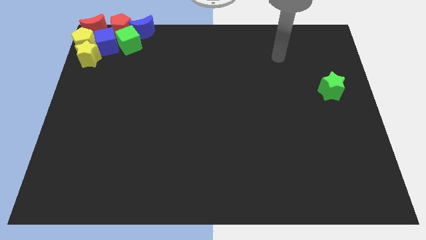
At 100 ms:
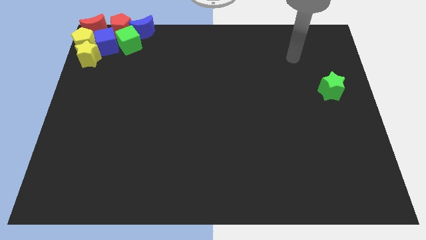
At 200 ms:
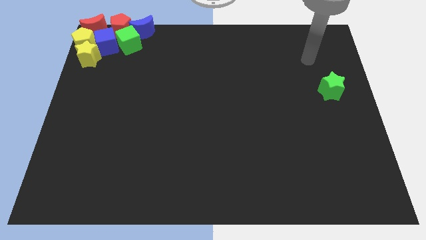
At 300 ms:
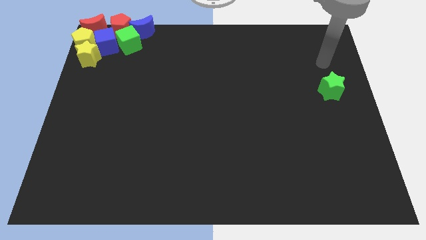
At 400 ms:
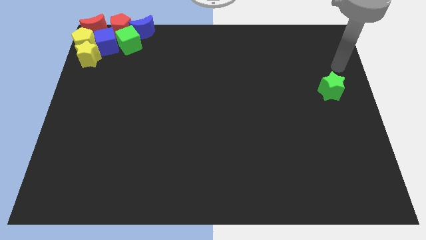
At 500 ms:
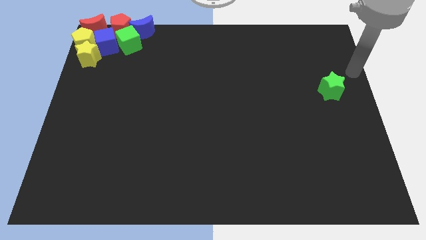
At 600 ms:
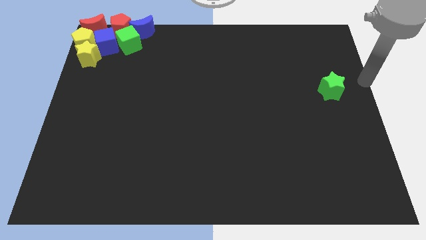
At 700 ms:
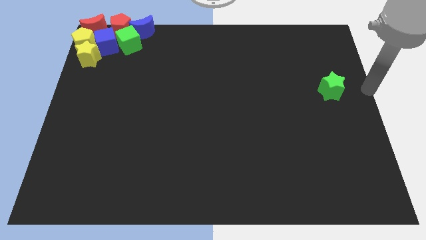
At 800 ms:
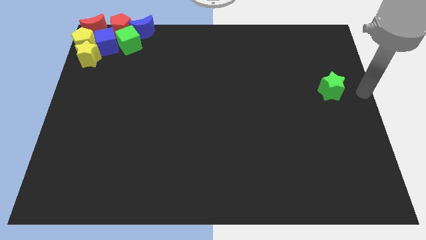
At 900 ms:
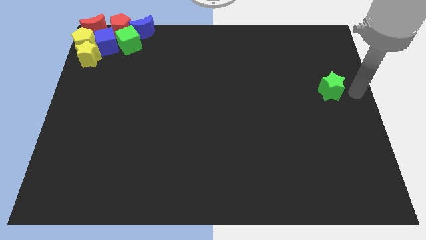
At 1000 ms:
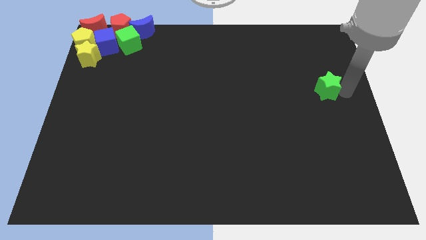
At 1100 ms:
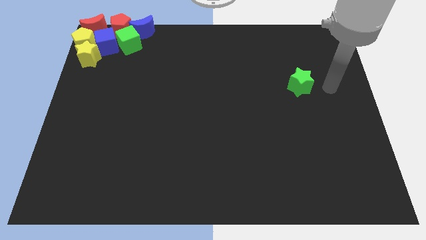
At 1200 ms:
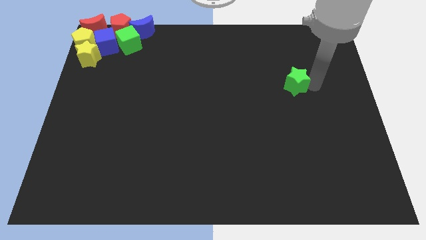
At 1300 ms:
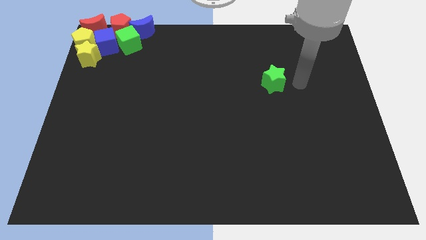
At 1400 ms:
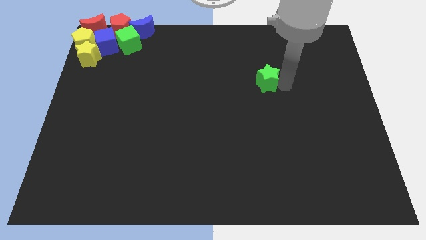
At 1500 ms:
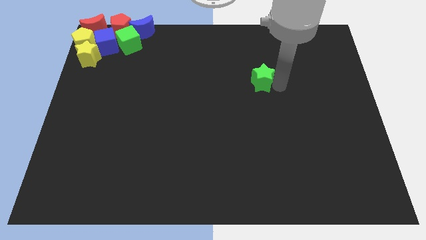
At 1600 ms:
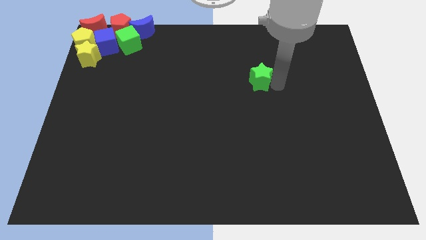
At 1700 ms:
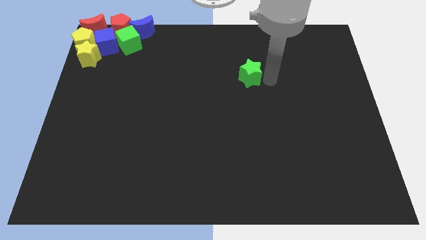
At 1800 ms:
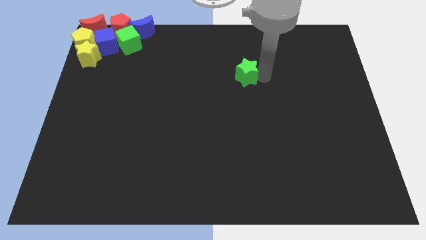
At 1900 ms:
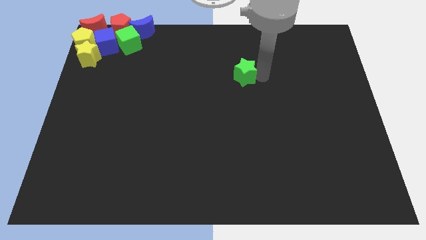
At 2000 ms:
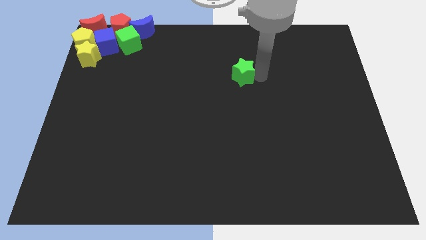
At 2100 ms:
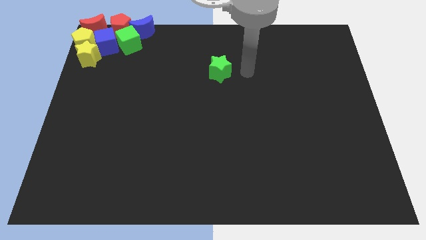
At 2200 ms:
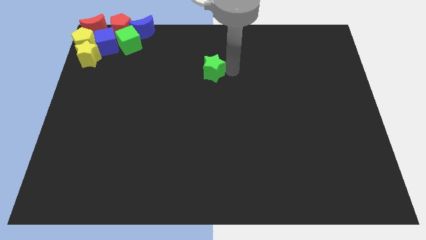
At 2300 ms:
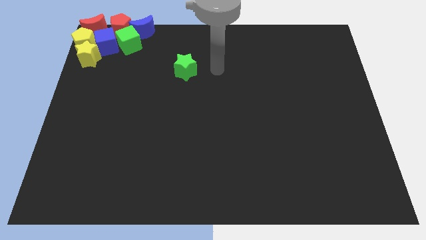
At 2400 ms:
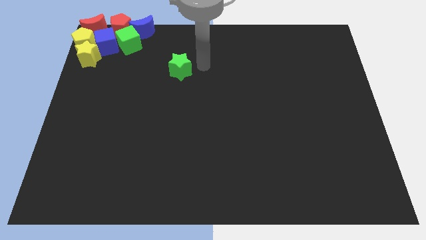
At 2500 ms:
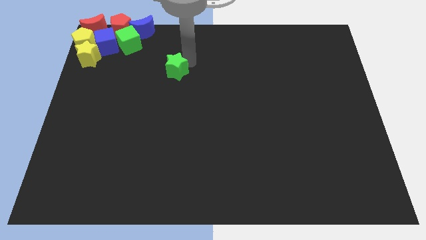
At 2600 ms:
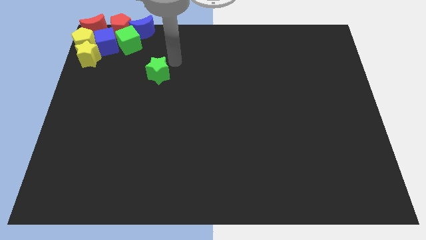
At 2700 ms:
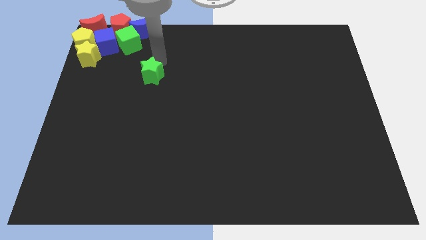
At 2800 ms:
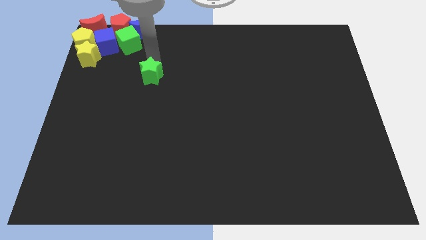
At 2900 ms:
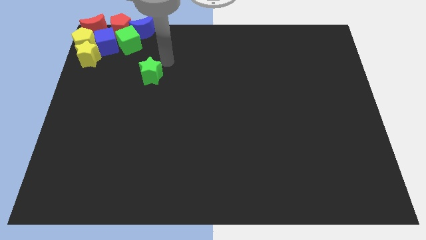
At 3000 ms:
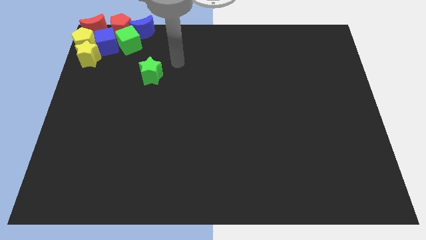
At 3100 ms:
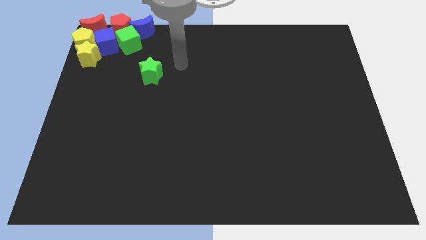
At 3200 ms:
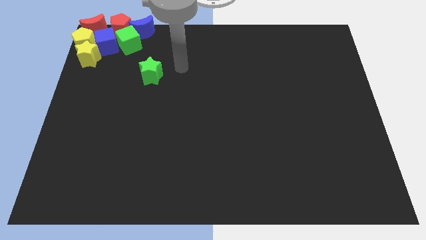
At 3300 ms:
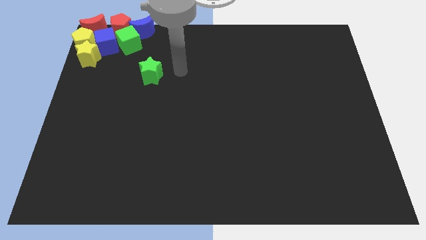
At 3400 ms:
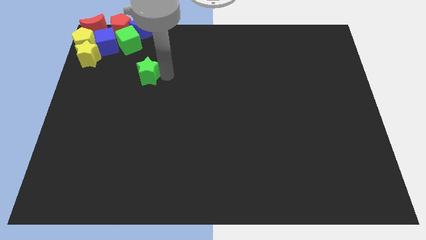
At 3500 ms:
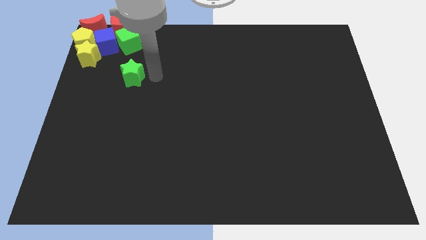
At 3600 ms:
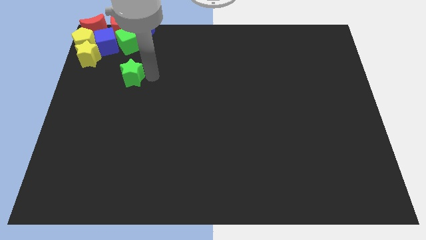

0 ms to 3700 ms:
place the green star into the group of blocks

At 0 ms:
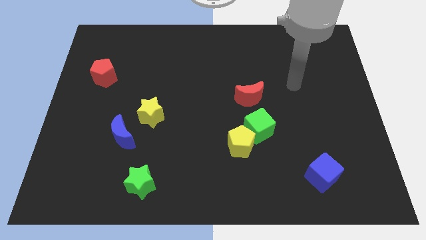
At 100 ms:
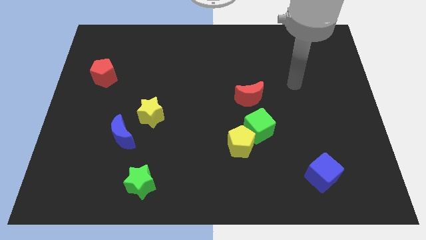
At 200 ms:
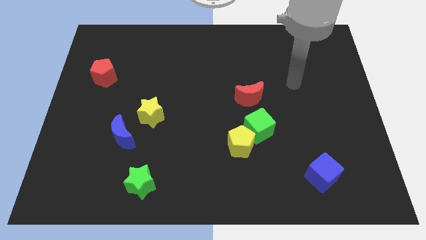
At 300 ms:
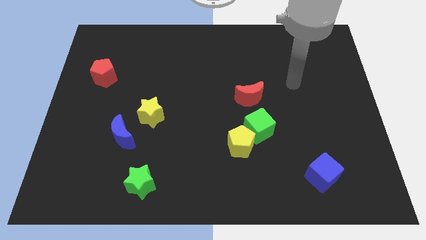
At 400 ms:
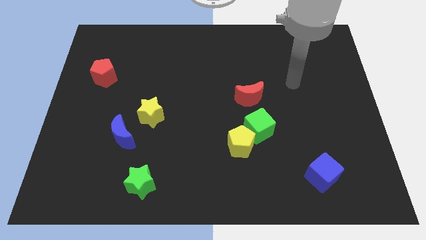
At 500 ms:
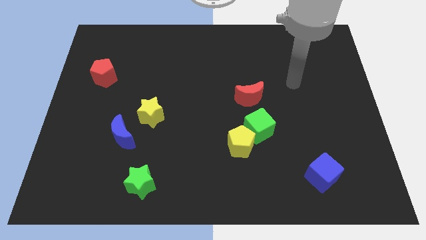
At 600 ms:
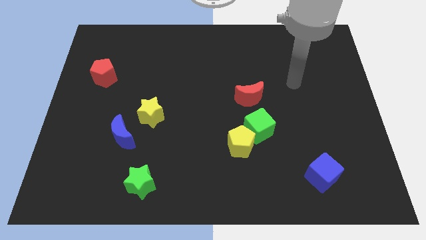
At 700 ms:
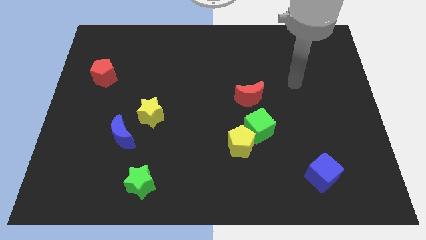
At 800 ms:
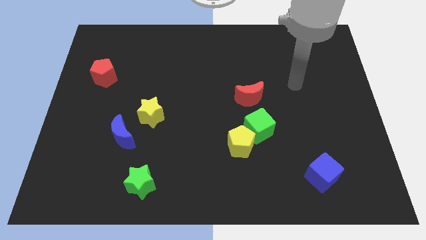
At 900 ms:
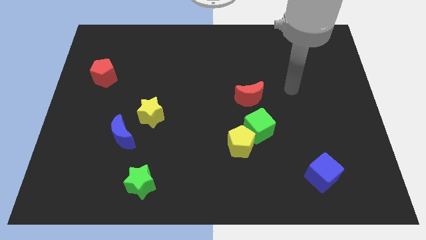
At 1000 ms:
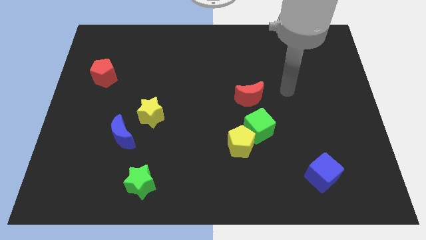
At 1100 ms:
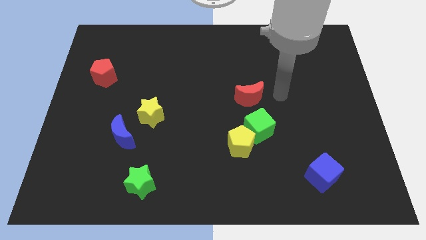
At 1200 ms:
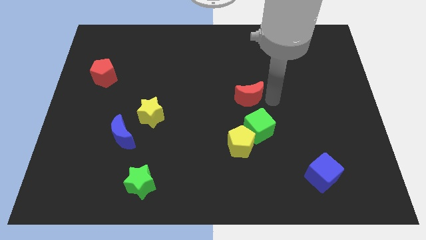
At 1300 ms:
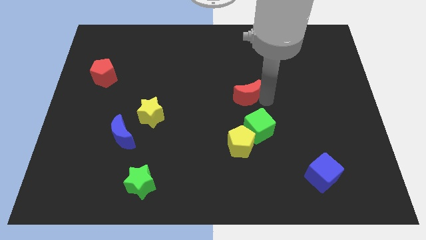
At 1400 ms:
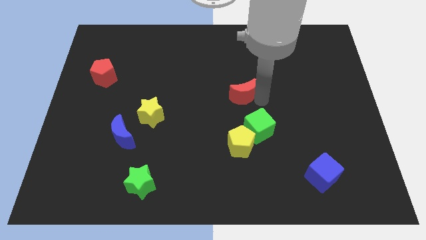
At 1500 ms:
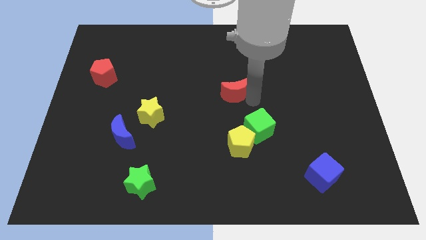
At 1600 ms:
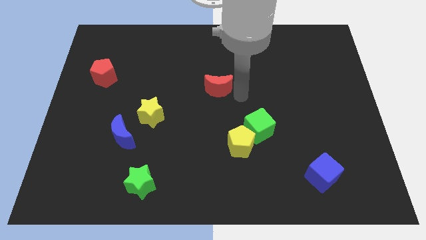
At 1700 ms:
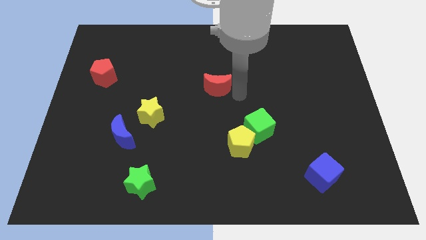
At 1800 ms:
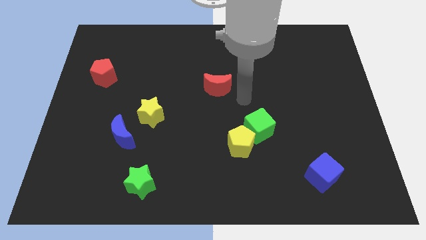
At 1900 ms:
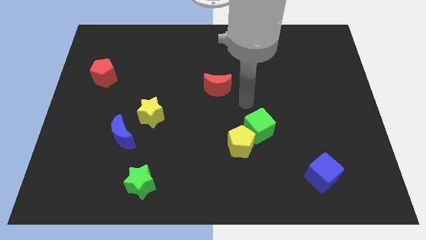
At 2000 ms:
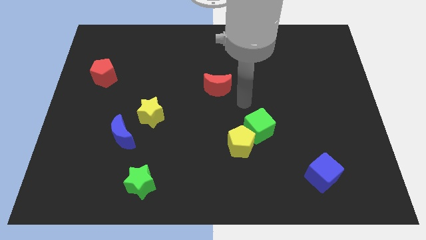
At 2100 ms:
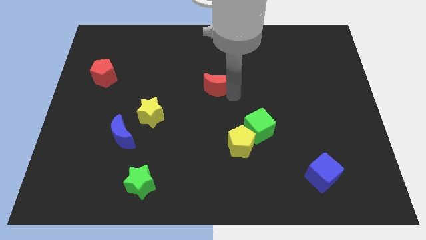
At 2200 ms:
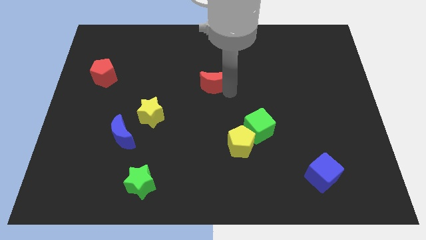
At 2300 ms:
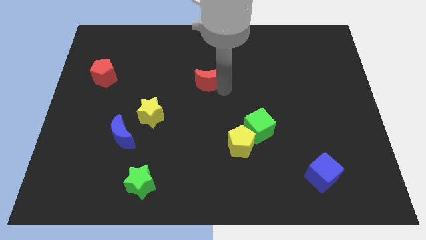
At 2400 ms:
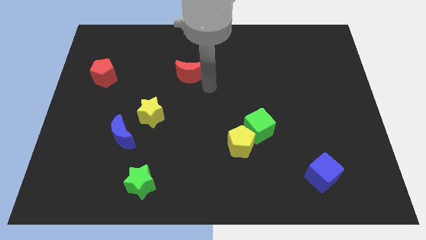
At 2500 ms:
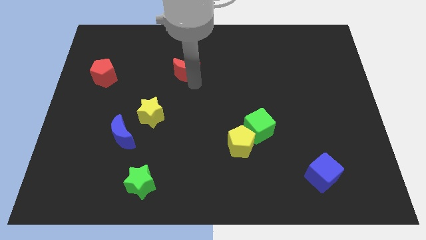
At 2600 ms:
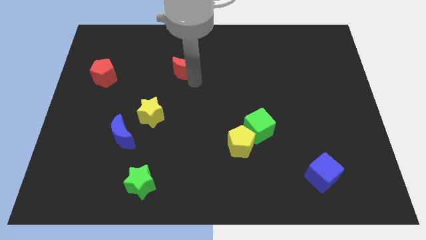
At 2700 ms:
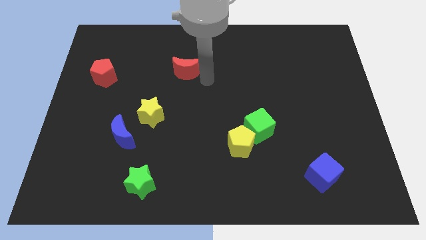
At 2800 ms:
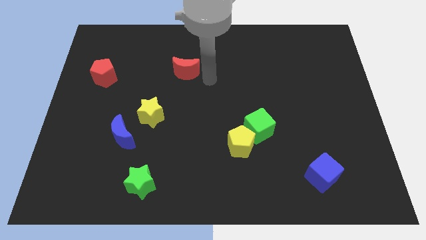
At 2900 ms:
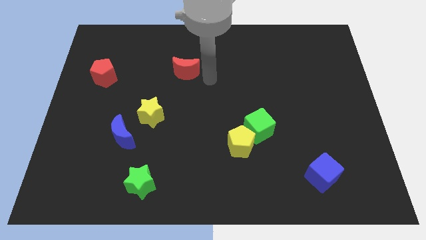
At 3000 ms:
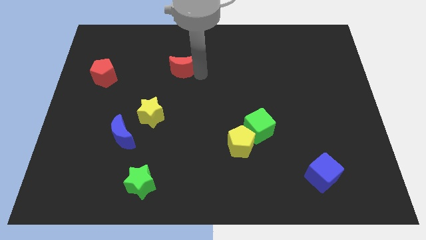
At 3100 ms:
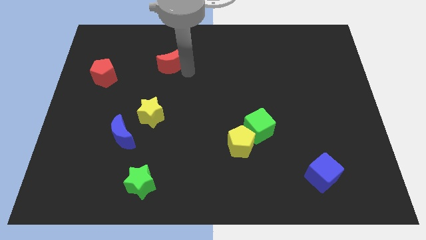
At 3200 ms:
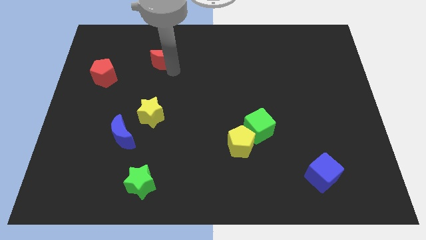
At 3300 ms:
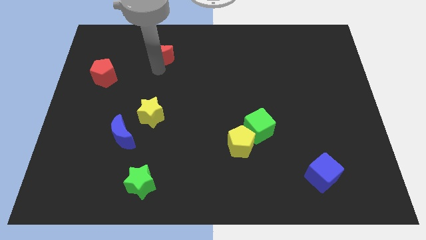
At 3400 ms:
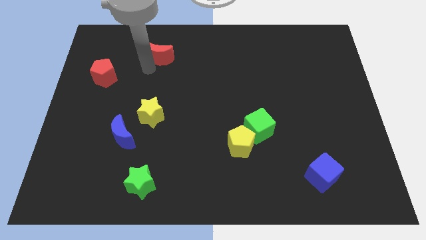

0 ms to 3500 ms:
move the red crescent above the yellow star

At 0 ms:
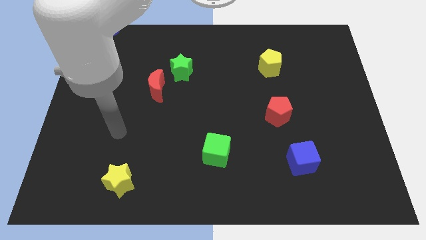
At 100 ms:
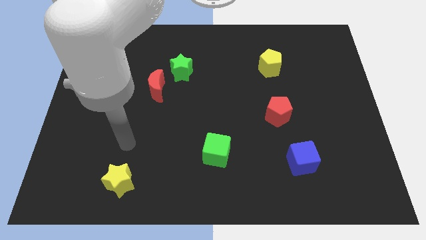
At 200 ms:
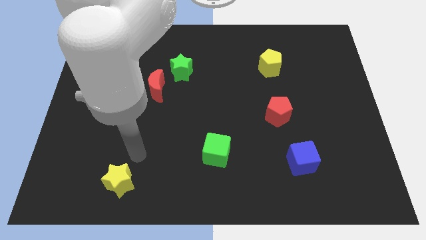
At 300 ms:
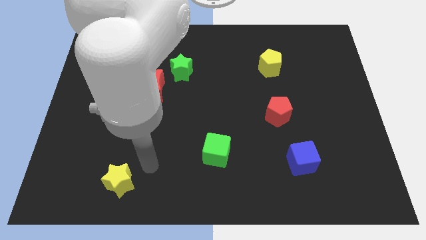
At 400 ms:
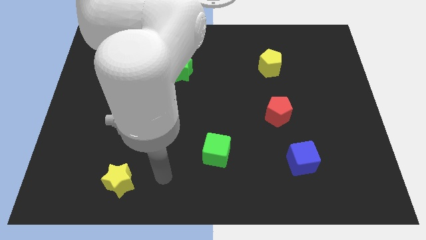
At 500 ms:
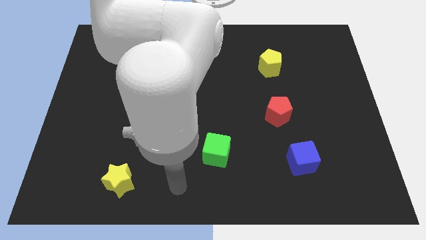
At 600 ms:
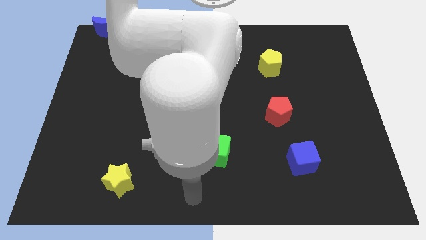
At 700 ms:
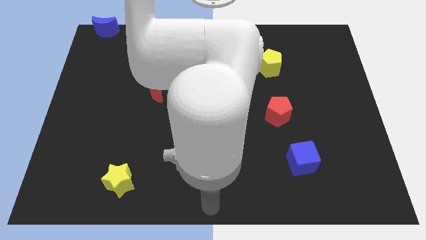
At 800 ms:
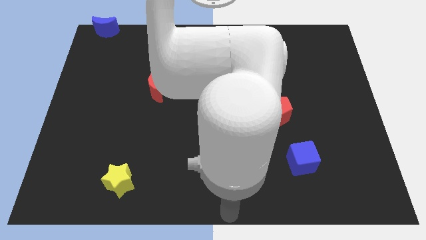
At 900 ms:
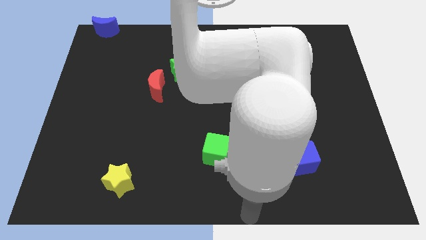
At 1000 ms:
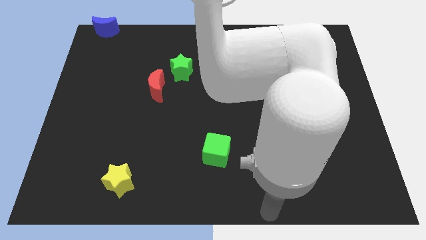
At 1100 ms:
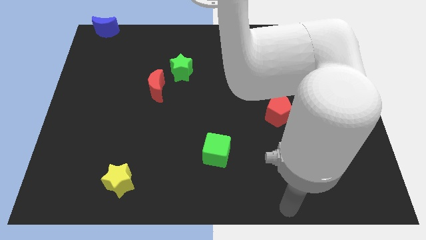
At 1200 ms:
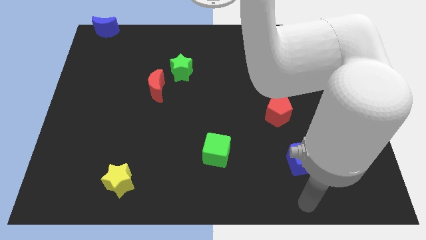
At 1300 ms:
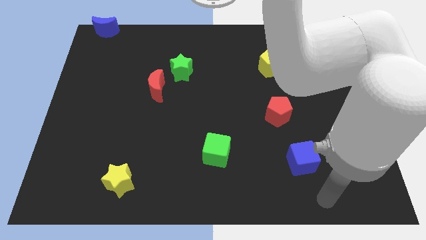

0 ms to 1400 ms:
place your arm below the blue cube

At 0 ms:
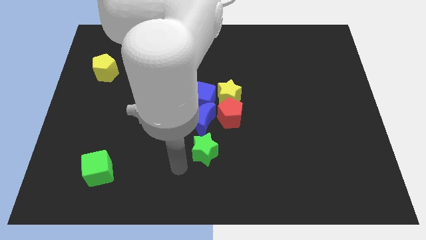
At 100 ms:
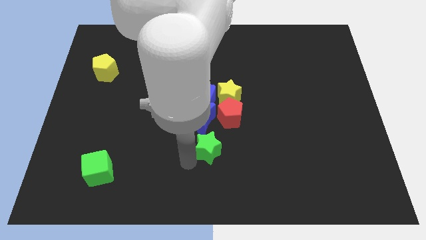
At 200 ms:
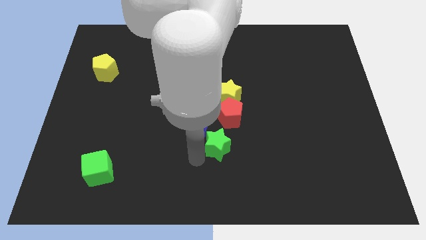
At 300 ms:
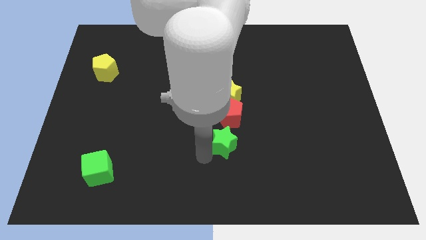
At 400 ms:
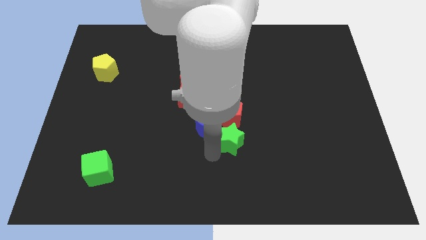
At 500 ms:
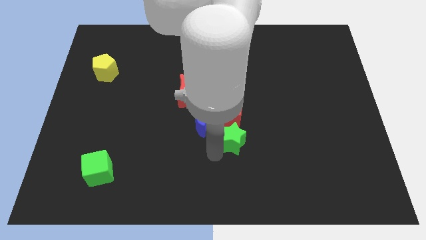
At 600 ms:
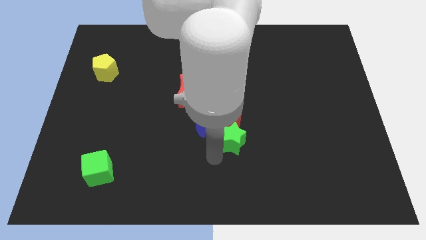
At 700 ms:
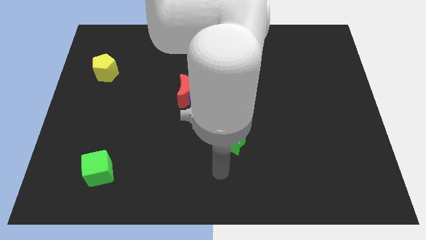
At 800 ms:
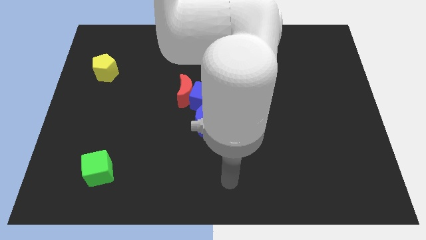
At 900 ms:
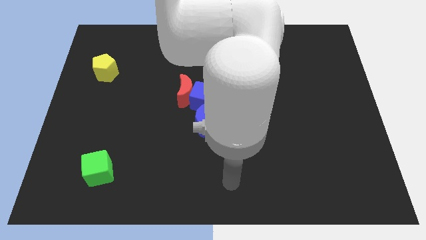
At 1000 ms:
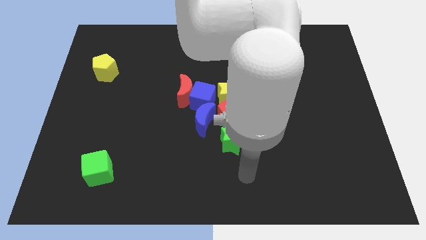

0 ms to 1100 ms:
slide green star below red pentagon
